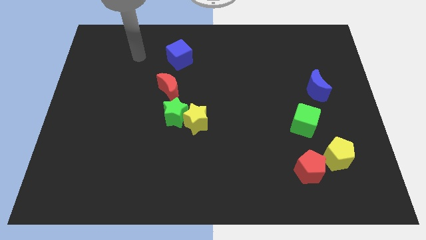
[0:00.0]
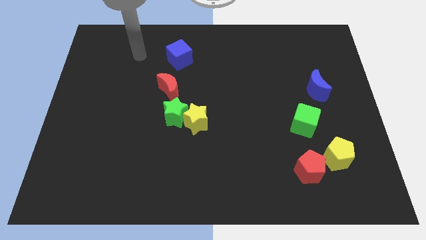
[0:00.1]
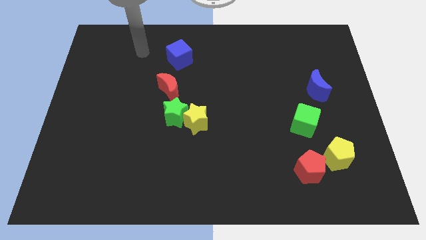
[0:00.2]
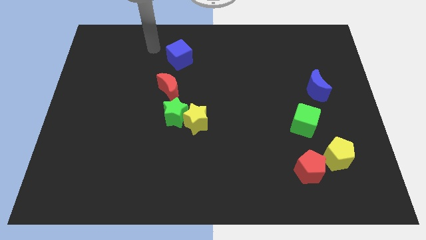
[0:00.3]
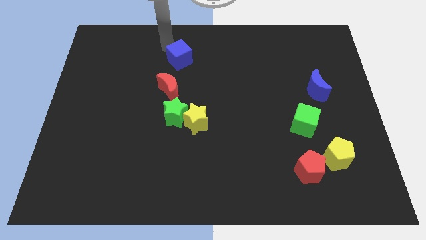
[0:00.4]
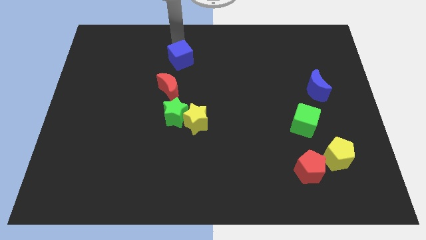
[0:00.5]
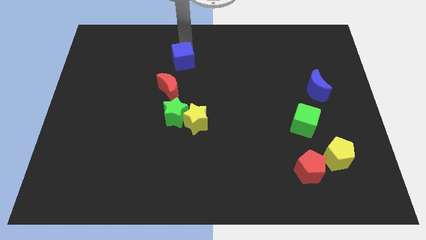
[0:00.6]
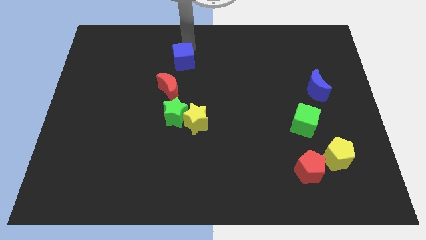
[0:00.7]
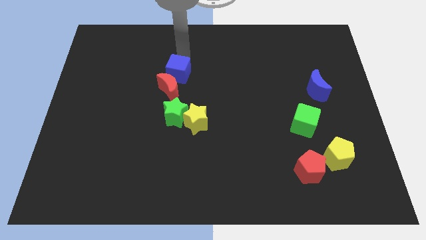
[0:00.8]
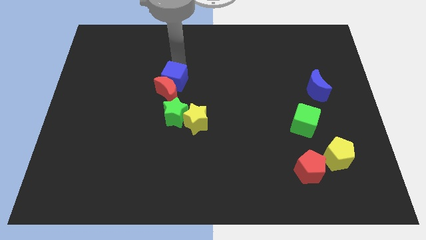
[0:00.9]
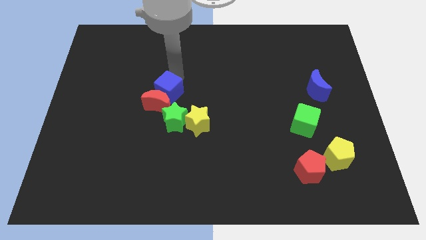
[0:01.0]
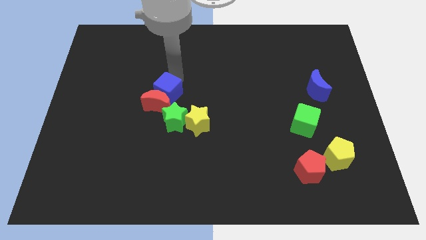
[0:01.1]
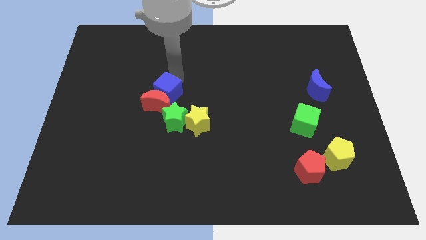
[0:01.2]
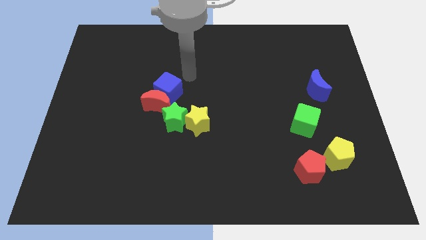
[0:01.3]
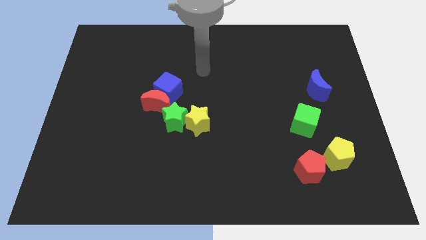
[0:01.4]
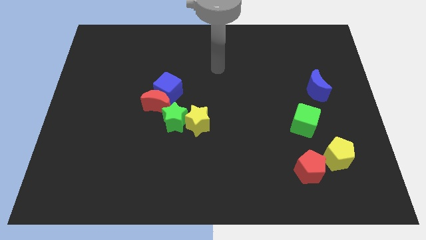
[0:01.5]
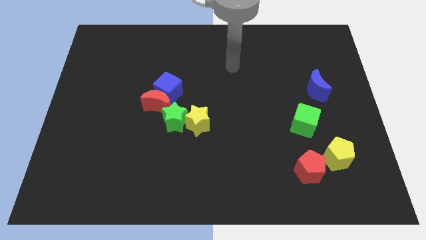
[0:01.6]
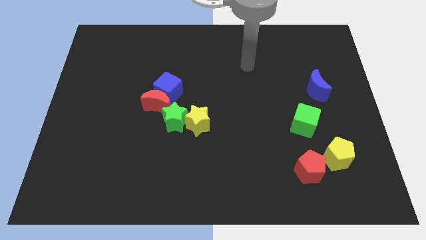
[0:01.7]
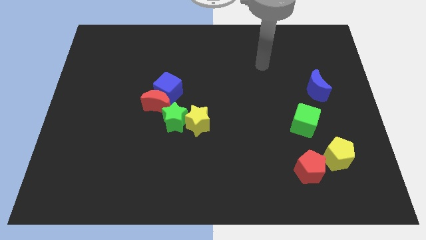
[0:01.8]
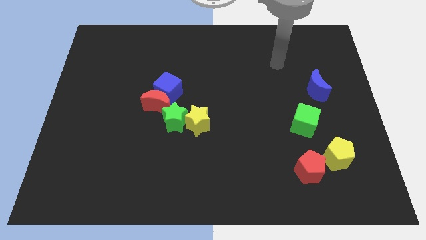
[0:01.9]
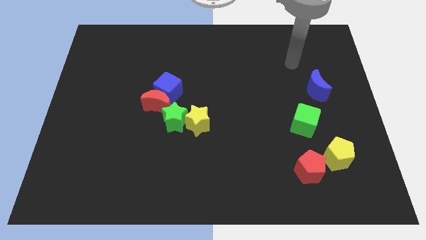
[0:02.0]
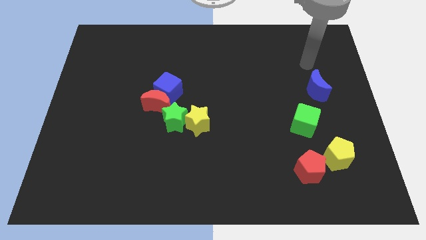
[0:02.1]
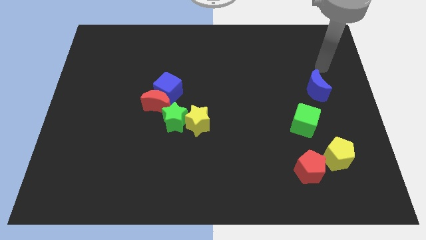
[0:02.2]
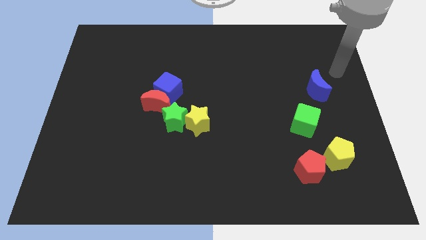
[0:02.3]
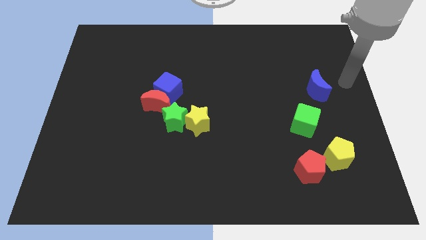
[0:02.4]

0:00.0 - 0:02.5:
push the blue cube into the red crescent

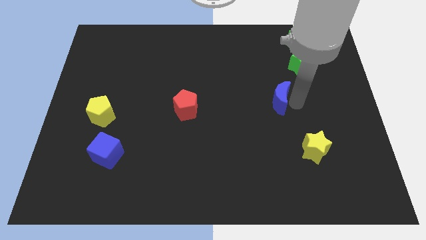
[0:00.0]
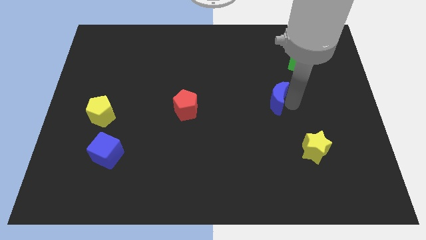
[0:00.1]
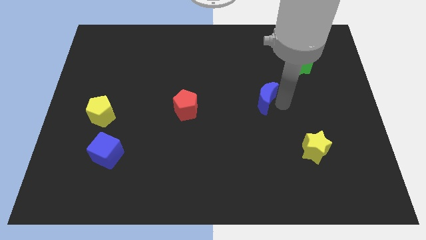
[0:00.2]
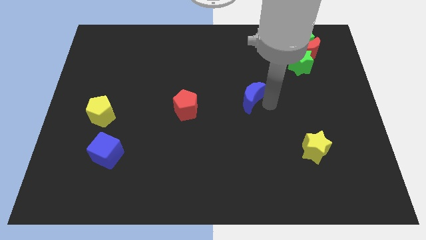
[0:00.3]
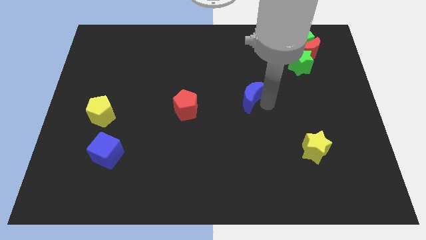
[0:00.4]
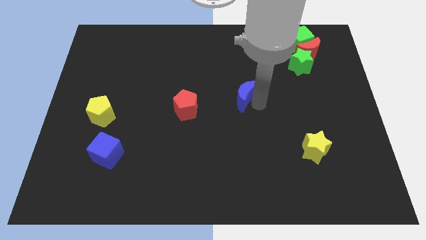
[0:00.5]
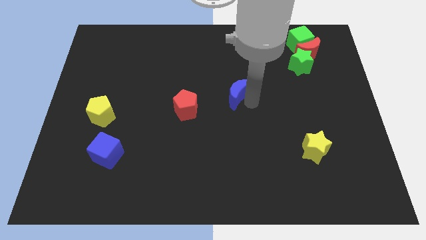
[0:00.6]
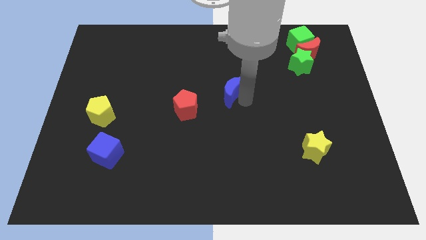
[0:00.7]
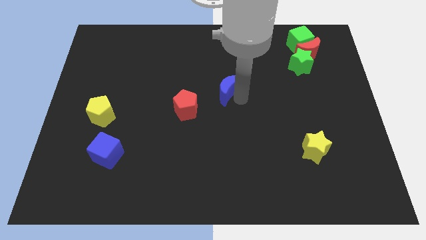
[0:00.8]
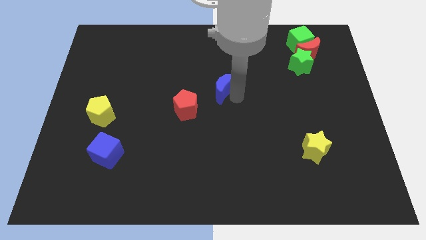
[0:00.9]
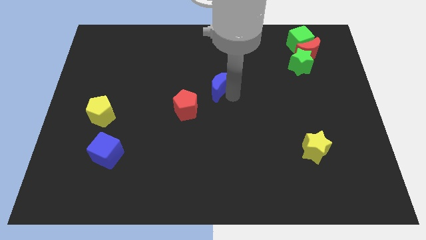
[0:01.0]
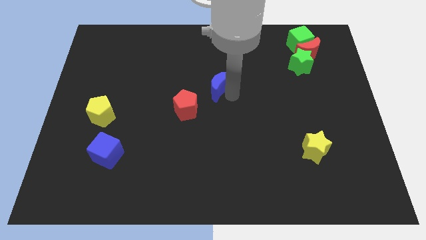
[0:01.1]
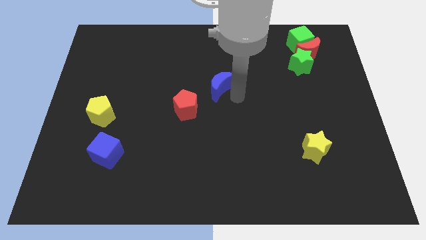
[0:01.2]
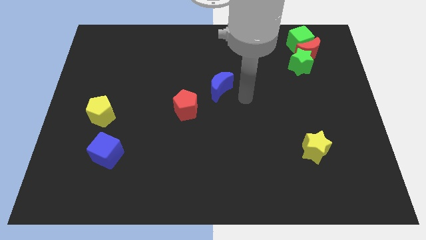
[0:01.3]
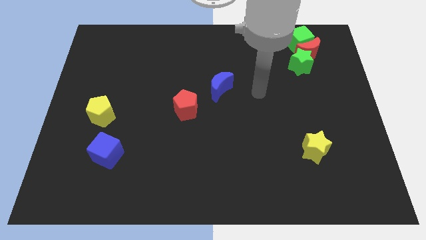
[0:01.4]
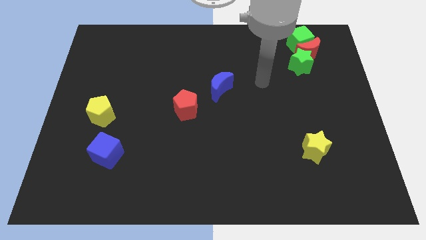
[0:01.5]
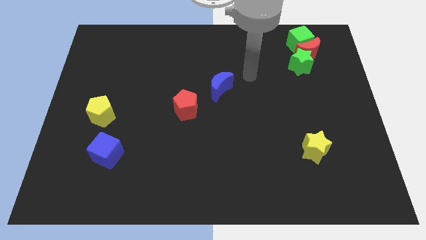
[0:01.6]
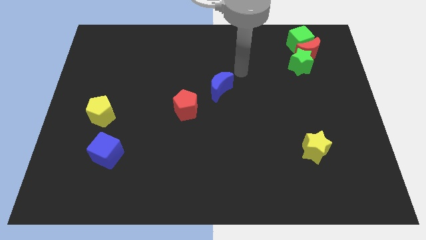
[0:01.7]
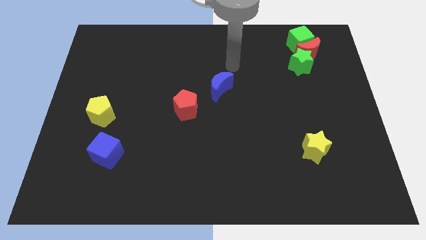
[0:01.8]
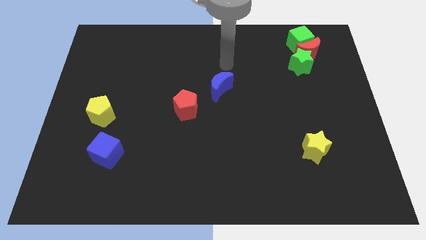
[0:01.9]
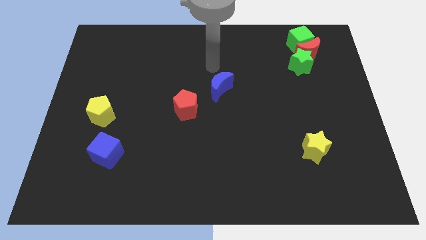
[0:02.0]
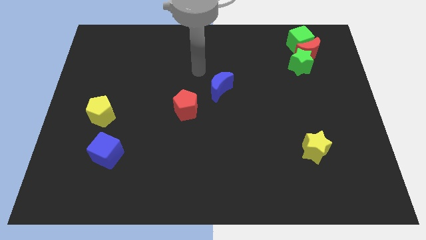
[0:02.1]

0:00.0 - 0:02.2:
move the blue moon to the center

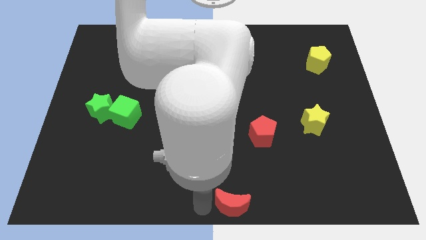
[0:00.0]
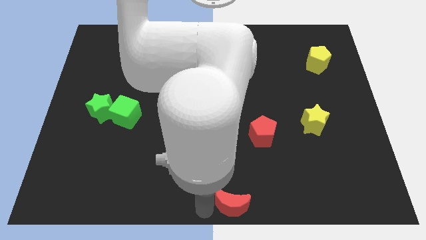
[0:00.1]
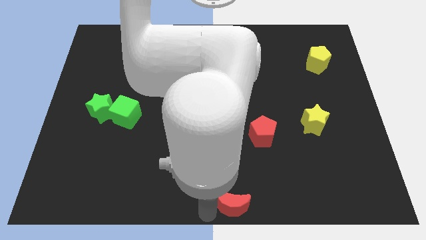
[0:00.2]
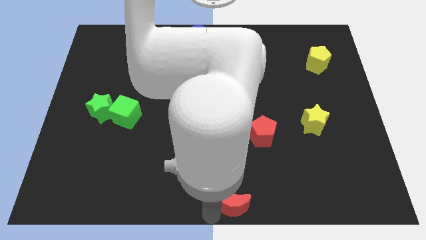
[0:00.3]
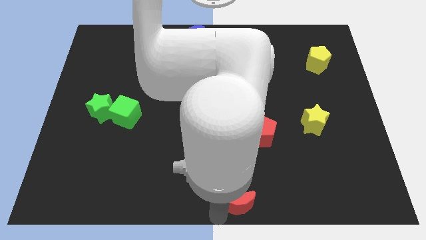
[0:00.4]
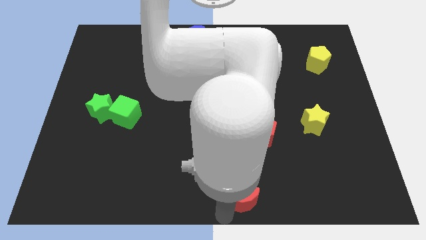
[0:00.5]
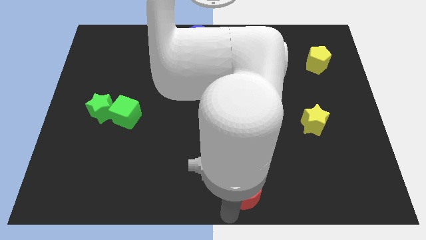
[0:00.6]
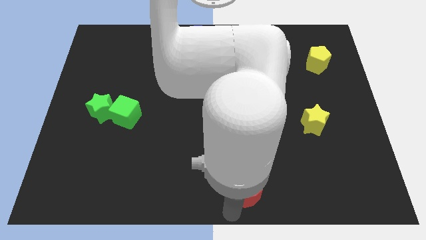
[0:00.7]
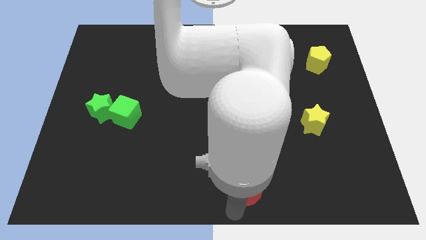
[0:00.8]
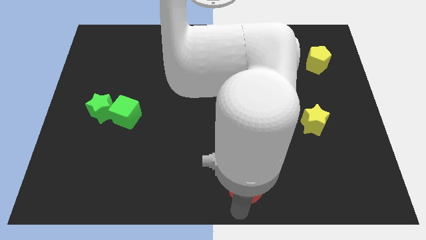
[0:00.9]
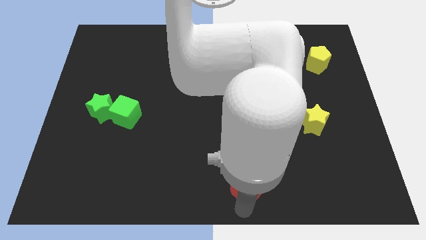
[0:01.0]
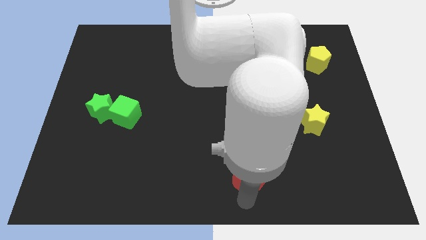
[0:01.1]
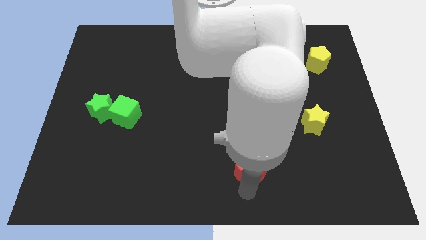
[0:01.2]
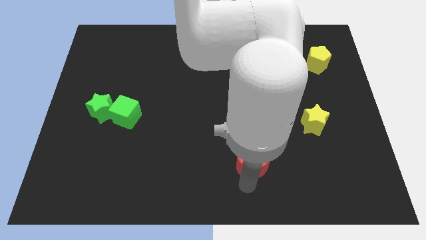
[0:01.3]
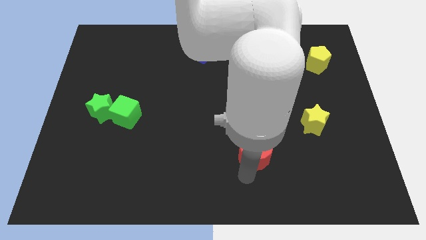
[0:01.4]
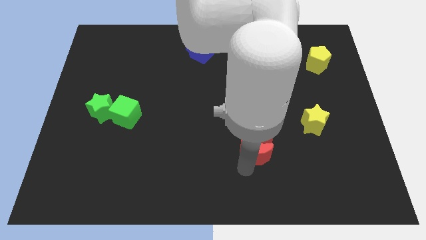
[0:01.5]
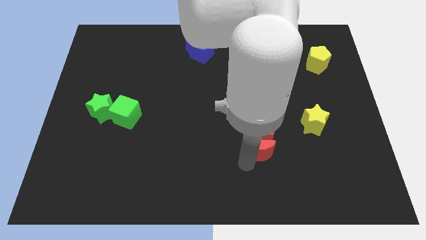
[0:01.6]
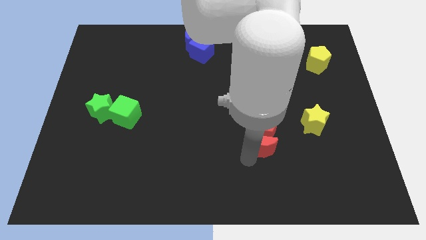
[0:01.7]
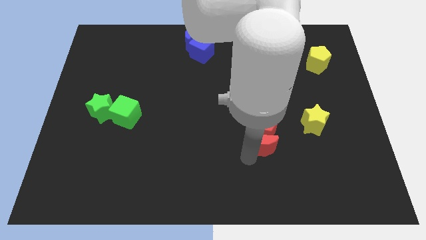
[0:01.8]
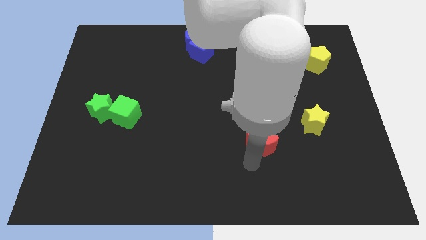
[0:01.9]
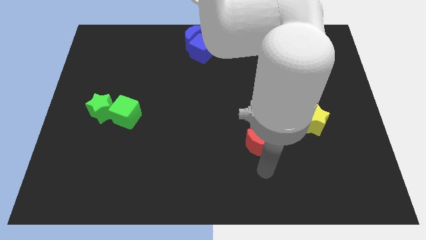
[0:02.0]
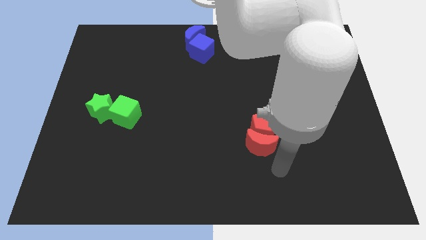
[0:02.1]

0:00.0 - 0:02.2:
push the red moon to the bottom side of the red pentagon

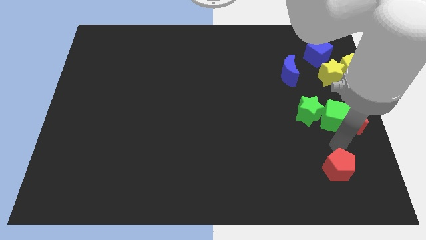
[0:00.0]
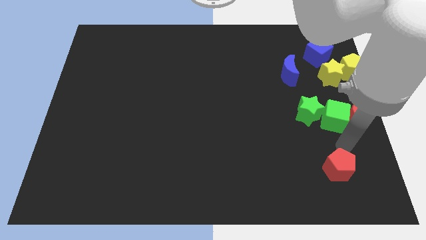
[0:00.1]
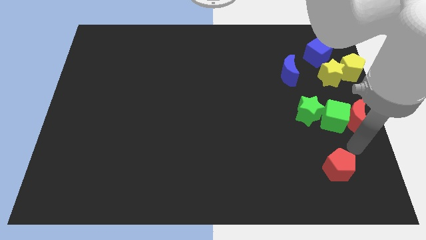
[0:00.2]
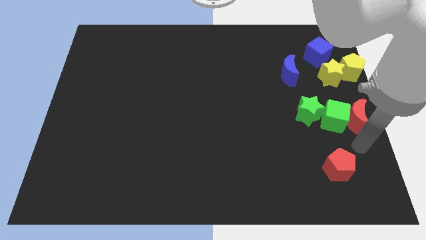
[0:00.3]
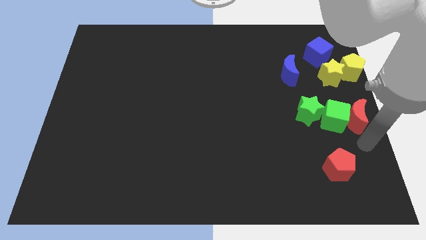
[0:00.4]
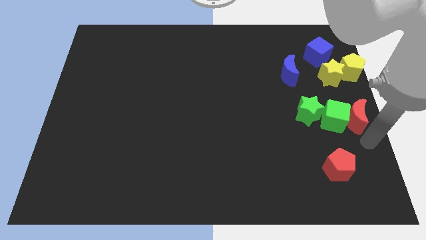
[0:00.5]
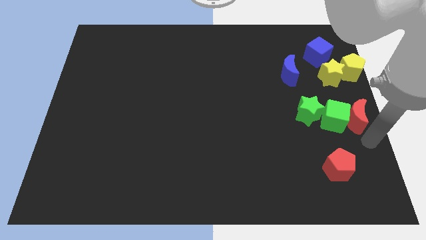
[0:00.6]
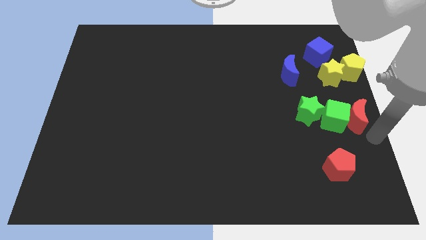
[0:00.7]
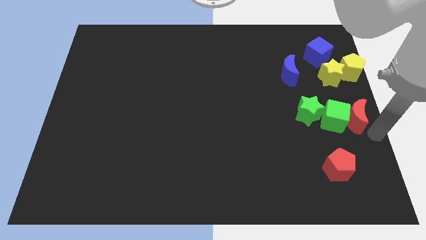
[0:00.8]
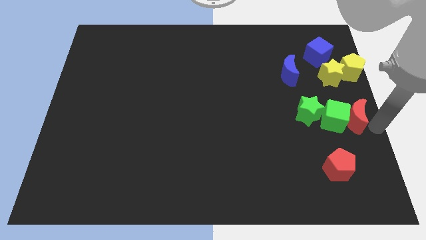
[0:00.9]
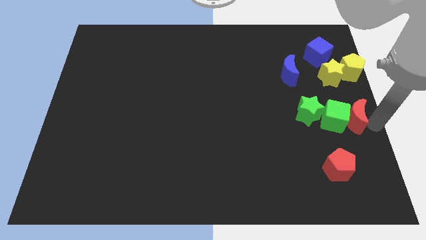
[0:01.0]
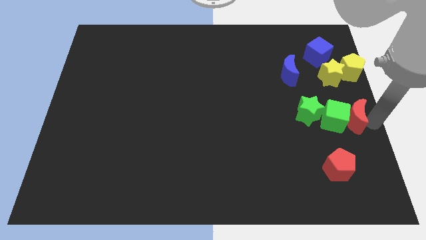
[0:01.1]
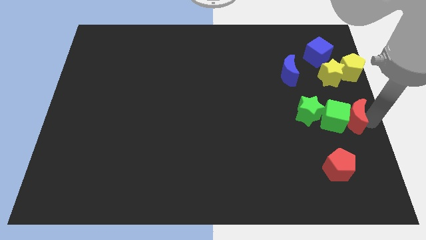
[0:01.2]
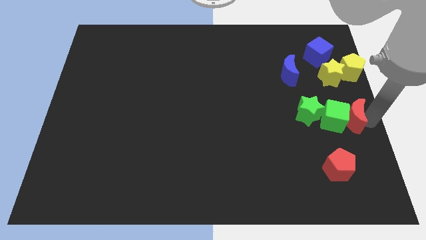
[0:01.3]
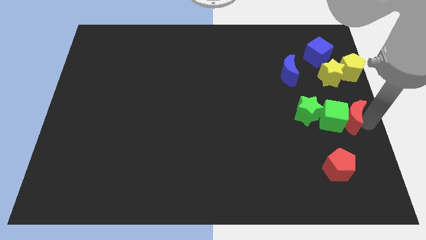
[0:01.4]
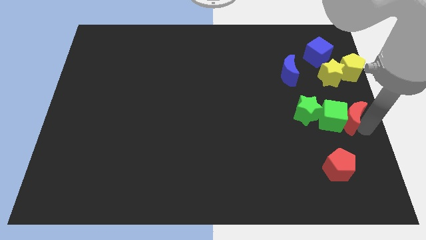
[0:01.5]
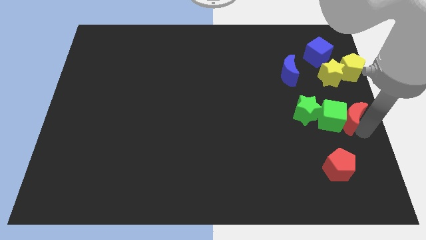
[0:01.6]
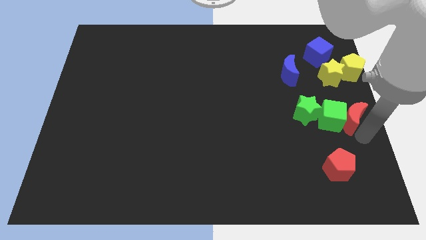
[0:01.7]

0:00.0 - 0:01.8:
move the red crescent green cube green star slightly to left

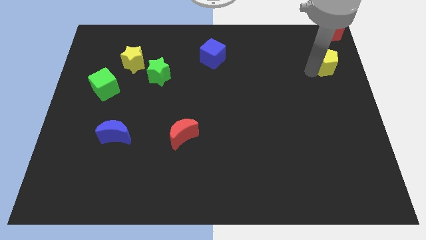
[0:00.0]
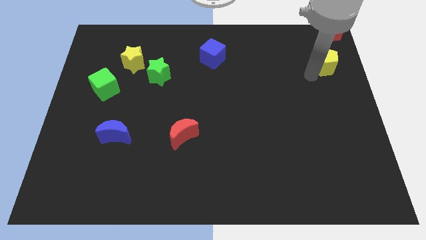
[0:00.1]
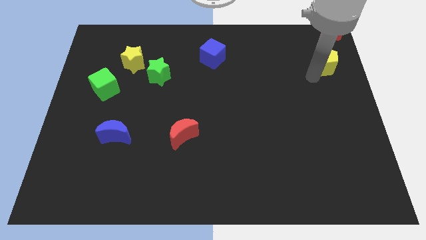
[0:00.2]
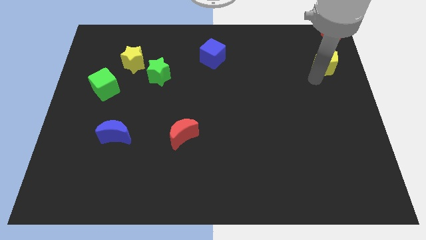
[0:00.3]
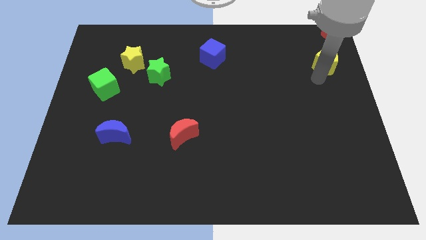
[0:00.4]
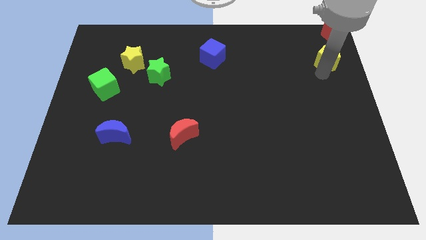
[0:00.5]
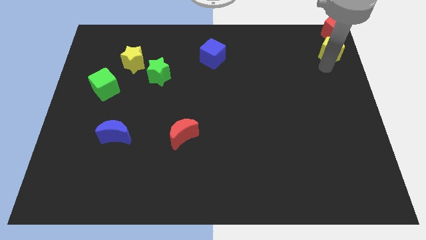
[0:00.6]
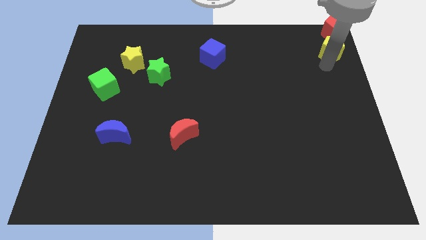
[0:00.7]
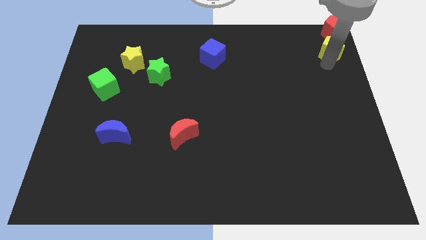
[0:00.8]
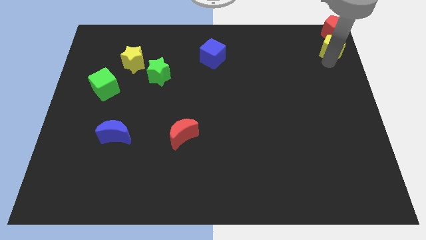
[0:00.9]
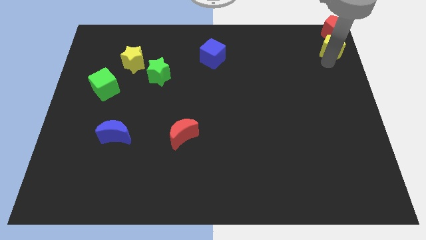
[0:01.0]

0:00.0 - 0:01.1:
place the yellow pentagon below the red pentagon
